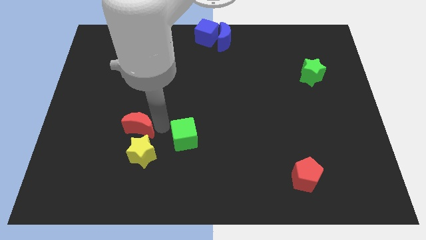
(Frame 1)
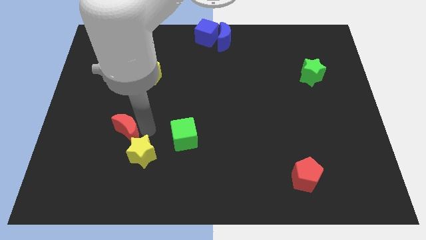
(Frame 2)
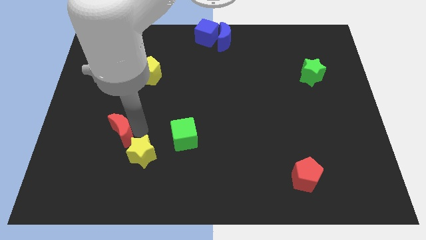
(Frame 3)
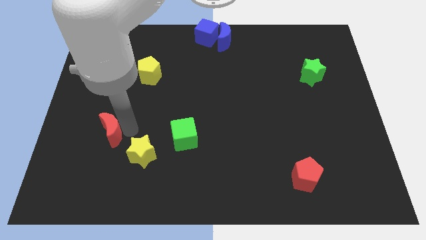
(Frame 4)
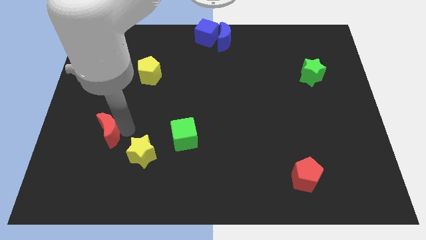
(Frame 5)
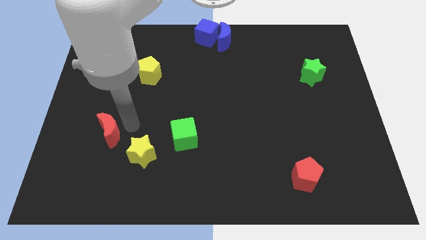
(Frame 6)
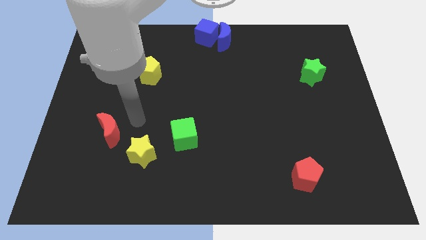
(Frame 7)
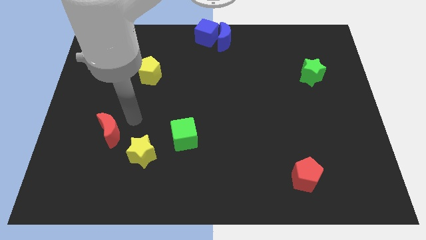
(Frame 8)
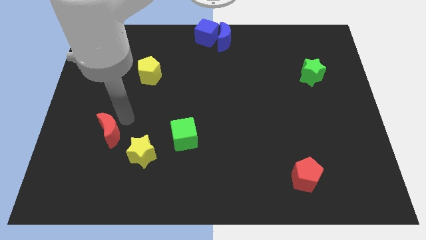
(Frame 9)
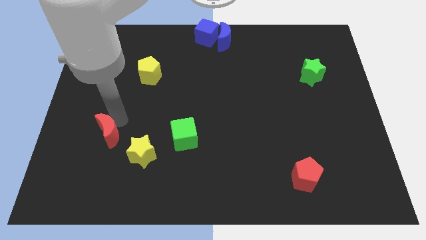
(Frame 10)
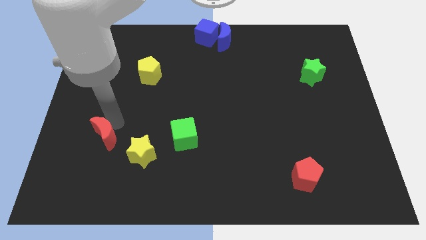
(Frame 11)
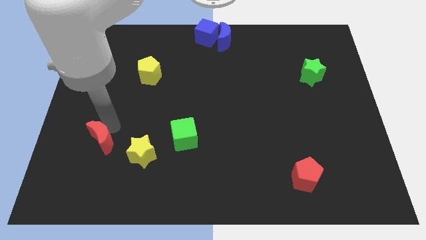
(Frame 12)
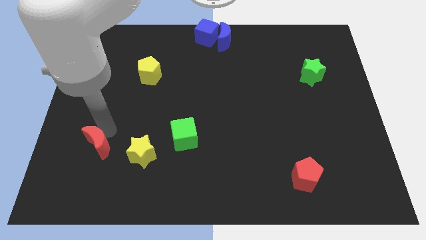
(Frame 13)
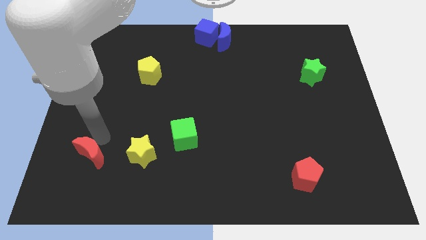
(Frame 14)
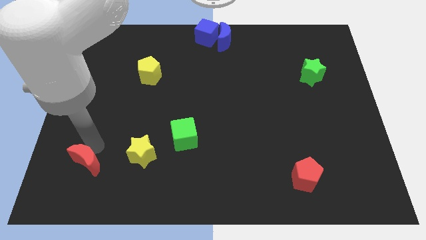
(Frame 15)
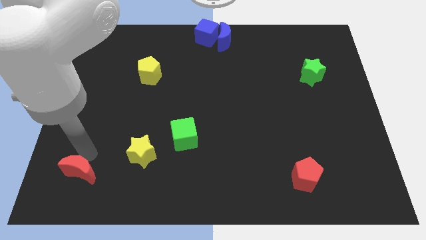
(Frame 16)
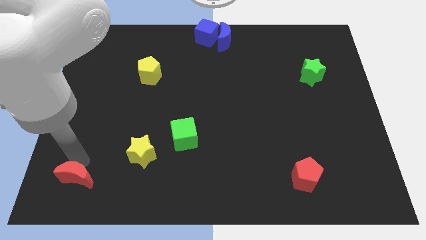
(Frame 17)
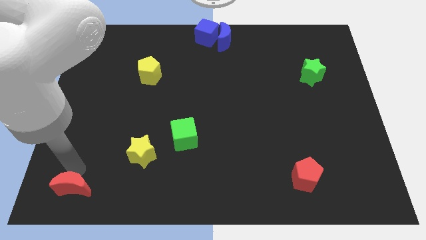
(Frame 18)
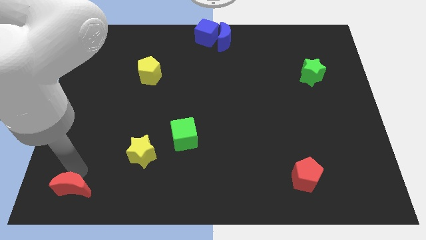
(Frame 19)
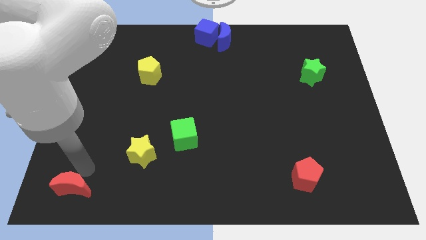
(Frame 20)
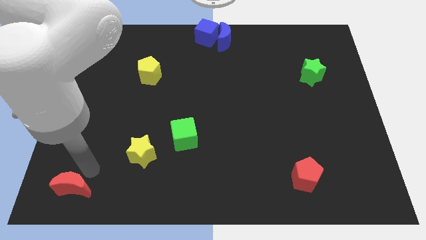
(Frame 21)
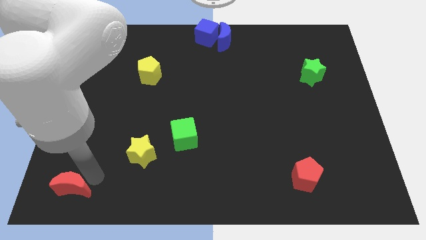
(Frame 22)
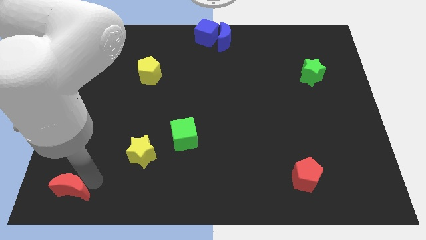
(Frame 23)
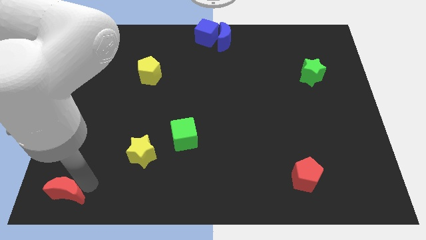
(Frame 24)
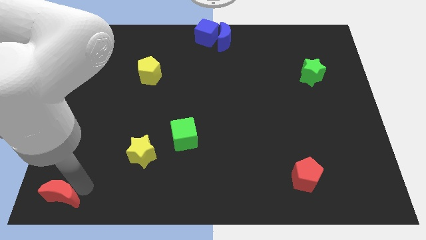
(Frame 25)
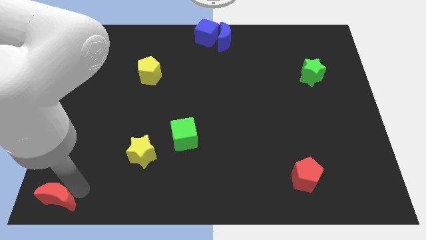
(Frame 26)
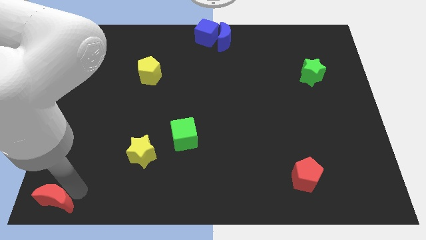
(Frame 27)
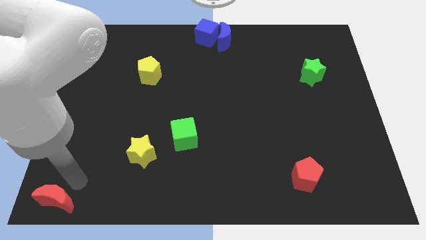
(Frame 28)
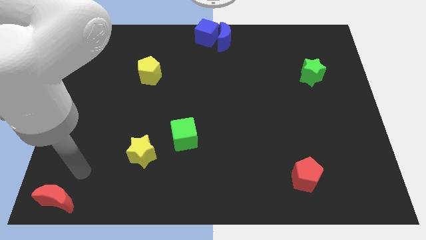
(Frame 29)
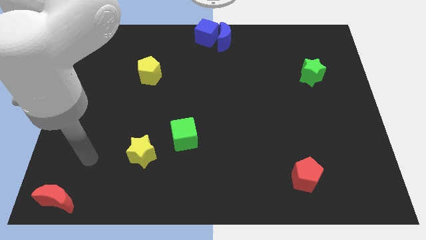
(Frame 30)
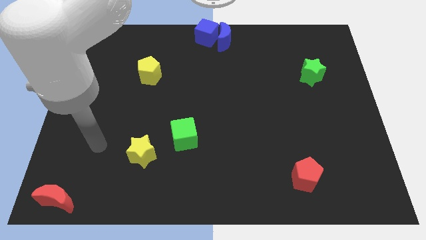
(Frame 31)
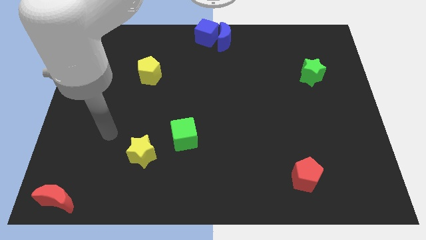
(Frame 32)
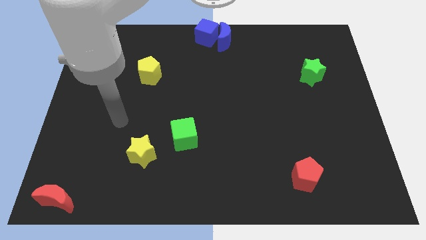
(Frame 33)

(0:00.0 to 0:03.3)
move the red crescent at the bottom left corner of the board

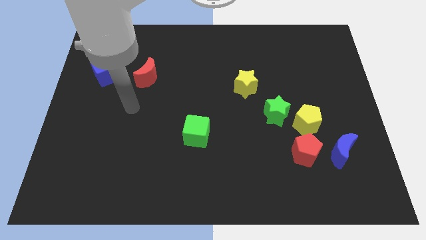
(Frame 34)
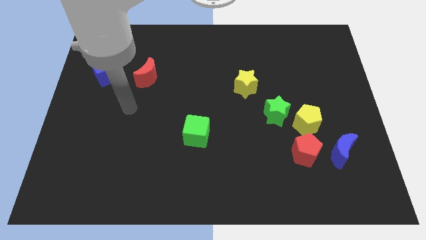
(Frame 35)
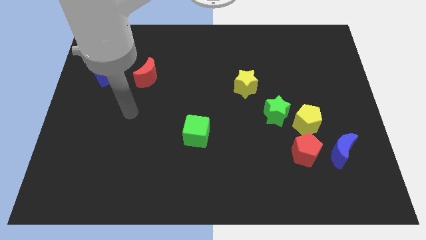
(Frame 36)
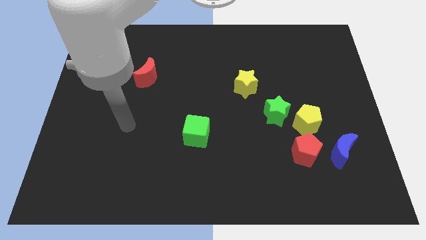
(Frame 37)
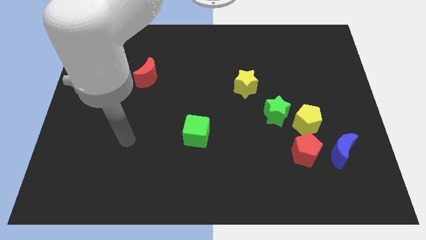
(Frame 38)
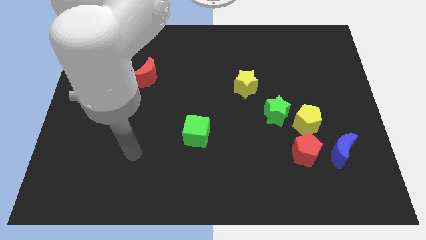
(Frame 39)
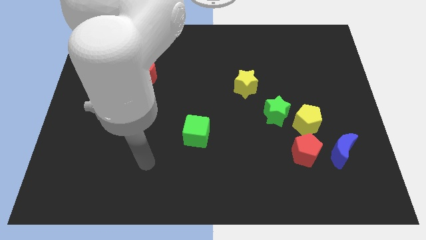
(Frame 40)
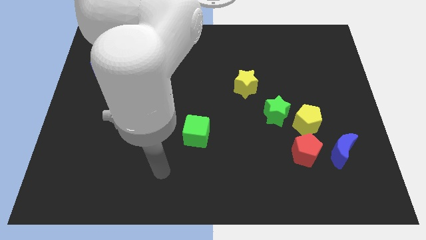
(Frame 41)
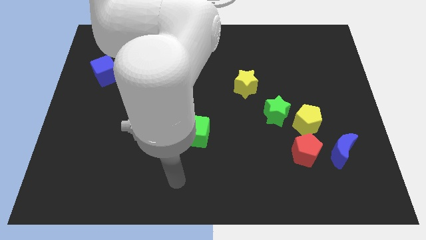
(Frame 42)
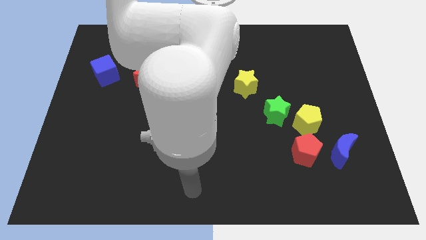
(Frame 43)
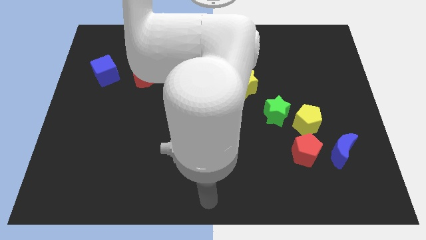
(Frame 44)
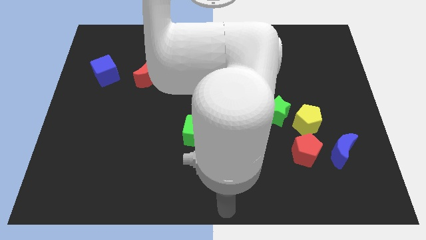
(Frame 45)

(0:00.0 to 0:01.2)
point your arm at the bottom center of the board

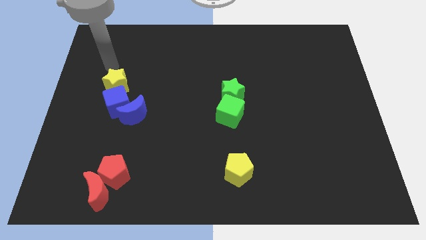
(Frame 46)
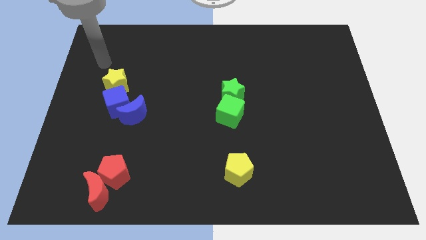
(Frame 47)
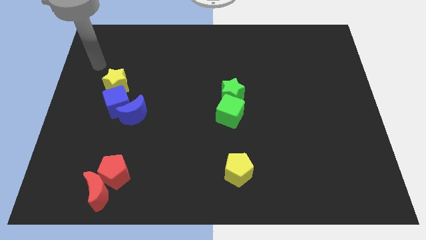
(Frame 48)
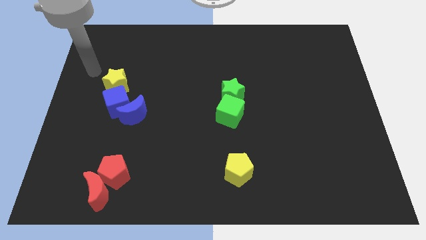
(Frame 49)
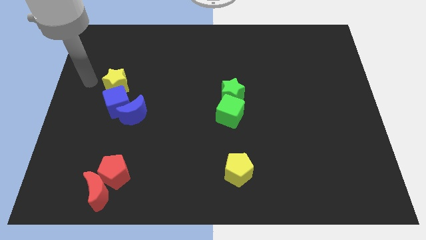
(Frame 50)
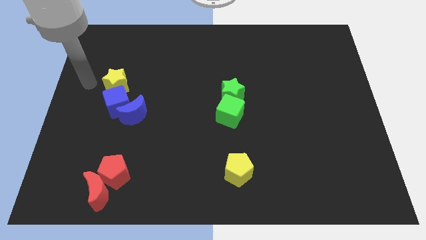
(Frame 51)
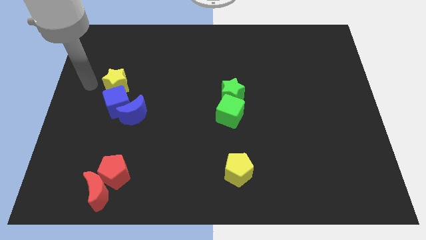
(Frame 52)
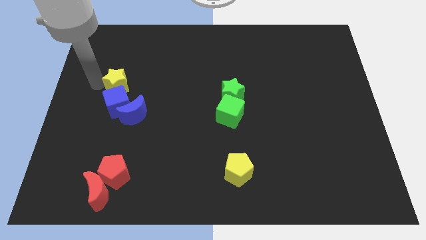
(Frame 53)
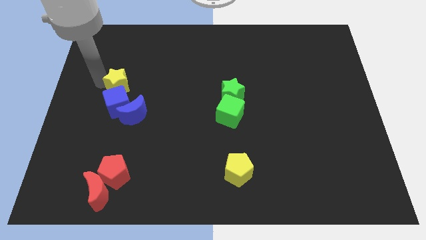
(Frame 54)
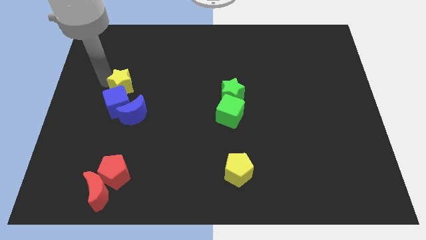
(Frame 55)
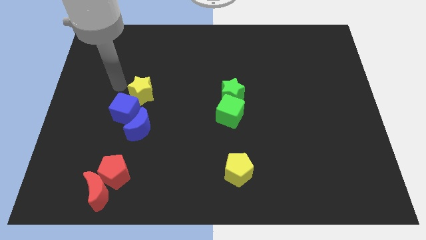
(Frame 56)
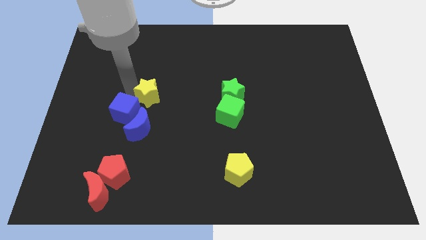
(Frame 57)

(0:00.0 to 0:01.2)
slightly push the yellow star towards the center

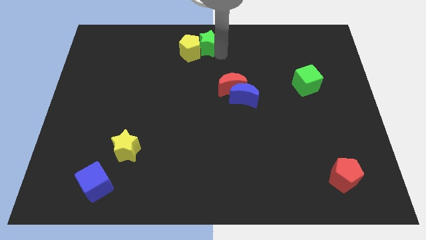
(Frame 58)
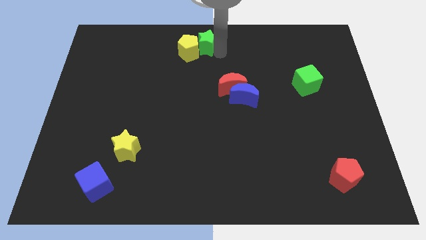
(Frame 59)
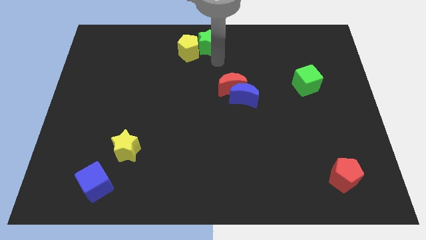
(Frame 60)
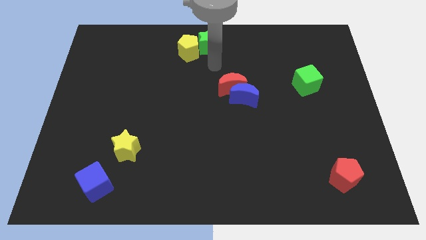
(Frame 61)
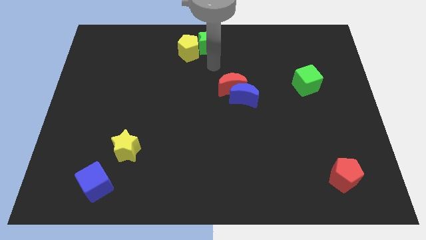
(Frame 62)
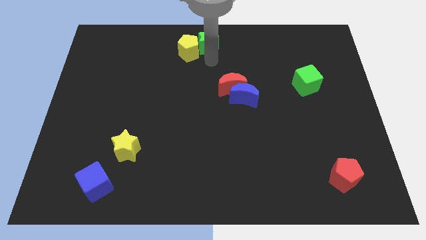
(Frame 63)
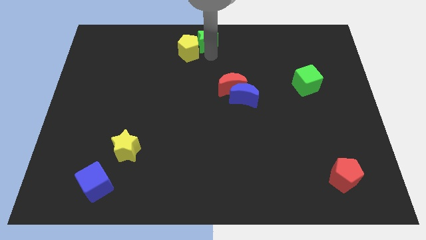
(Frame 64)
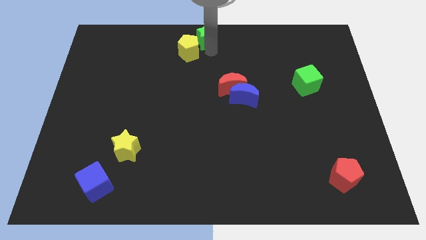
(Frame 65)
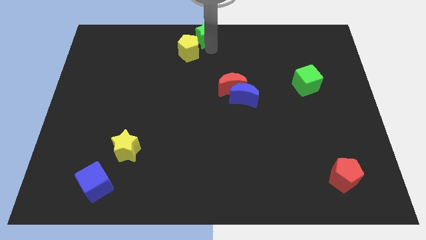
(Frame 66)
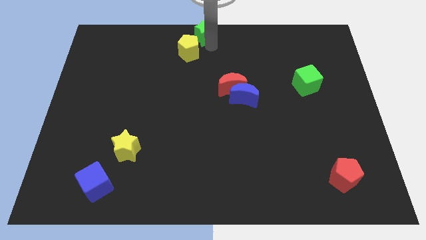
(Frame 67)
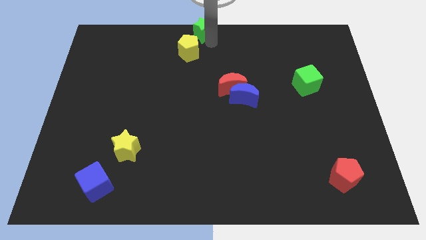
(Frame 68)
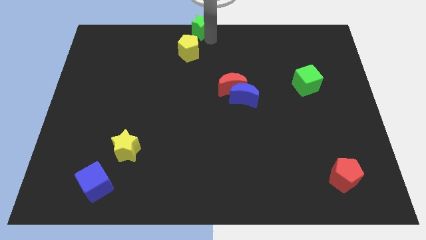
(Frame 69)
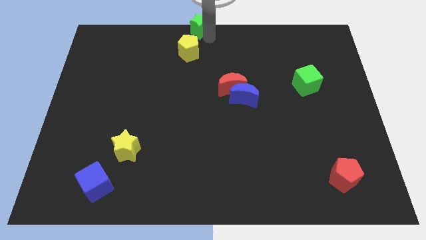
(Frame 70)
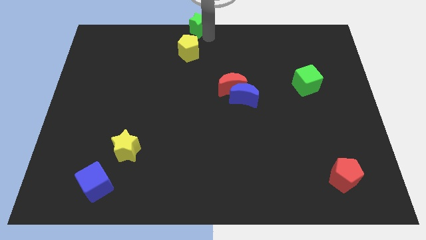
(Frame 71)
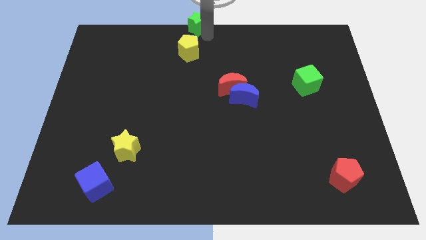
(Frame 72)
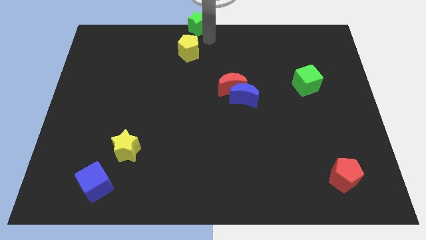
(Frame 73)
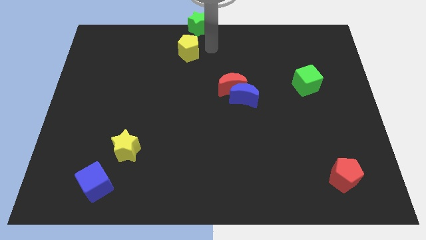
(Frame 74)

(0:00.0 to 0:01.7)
separate the green star away from the yellow pentagon

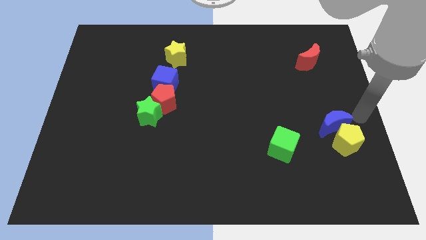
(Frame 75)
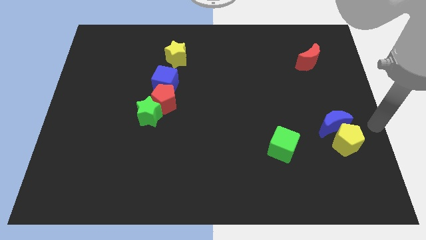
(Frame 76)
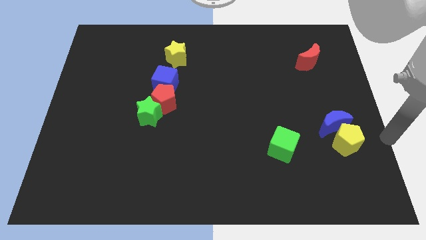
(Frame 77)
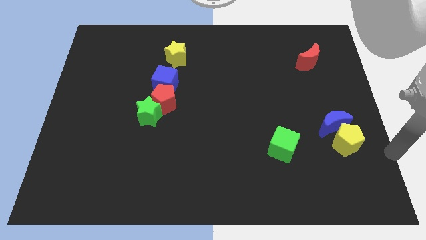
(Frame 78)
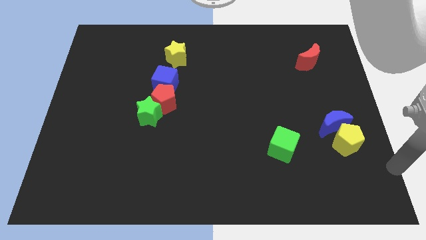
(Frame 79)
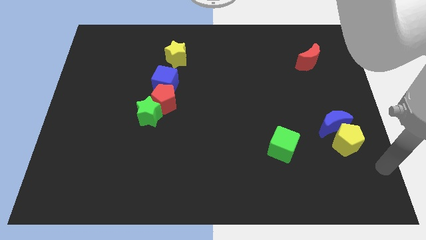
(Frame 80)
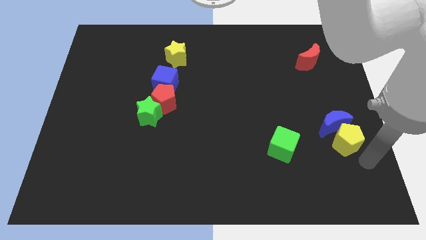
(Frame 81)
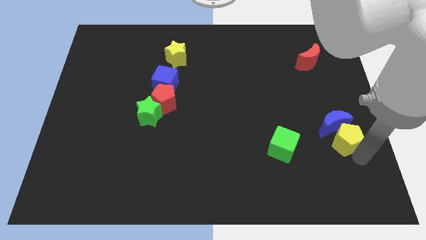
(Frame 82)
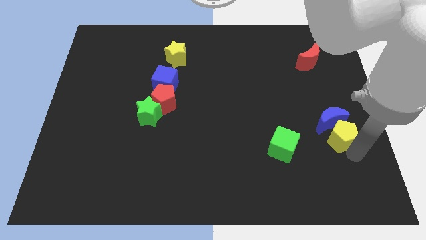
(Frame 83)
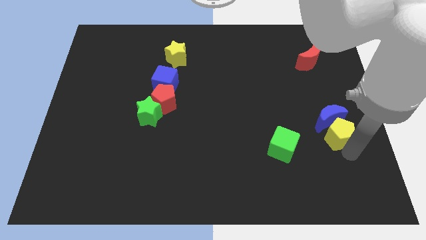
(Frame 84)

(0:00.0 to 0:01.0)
touch the bottom of yellow pentagon

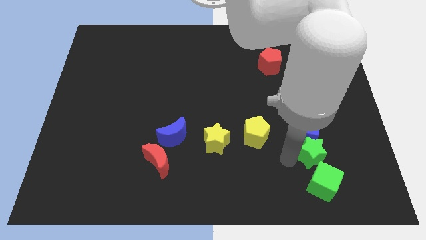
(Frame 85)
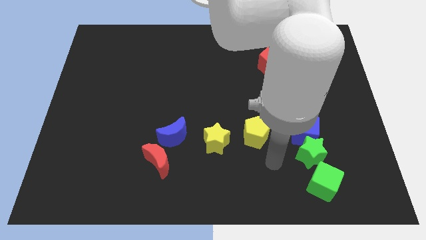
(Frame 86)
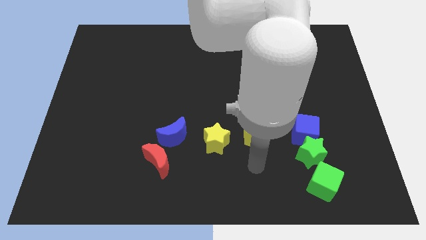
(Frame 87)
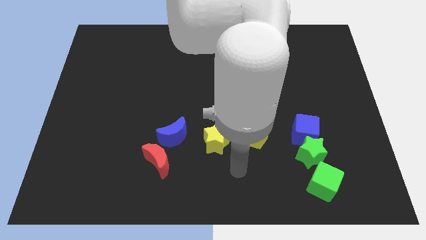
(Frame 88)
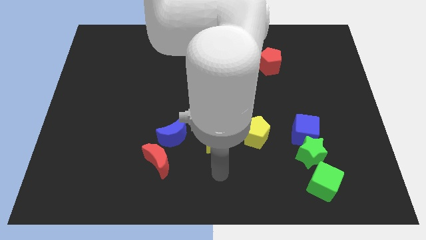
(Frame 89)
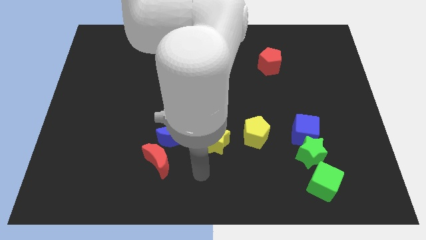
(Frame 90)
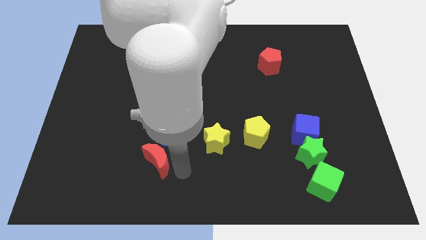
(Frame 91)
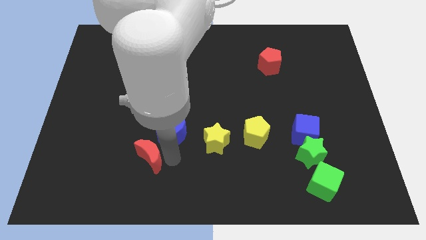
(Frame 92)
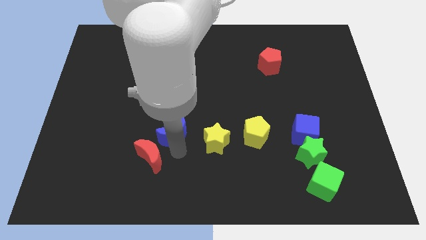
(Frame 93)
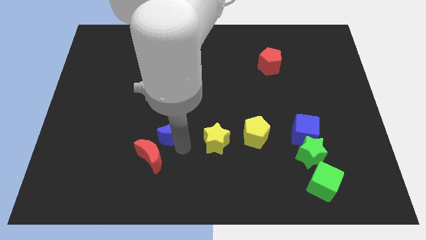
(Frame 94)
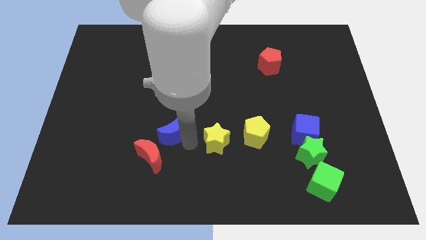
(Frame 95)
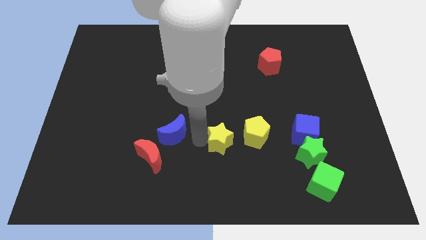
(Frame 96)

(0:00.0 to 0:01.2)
point your arm at the bottom of the blue crescent
